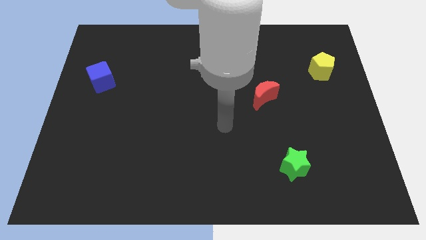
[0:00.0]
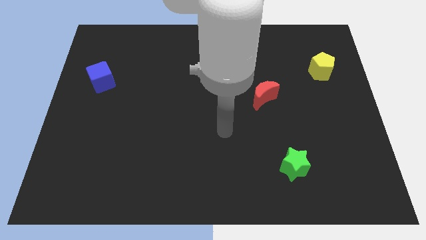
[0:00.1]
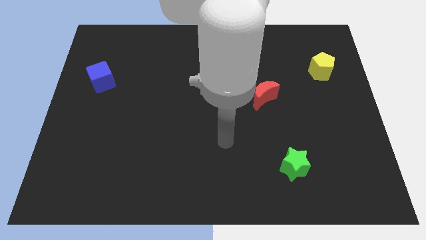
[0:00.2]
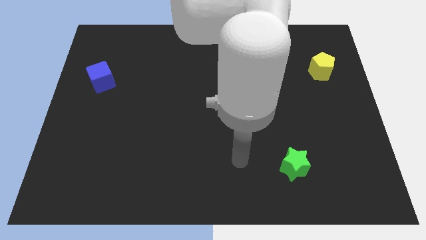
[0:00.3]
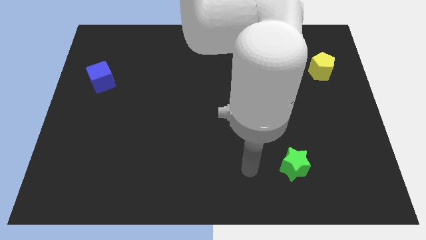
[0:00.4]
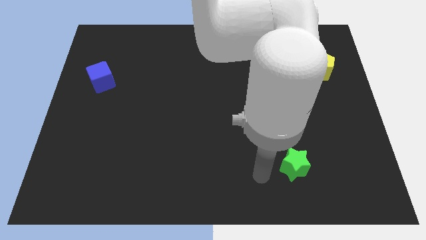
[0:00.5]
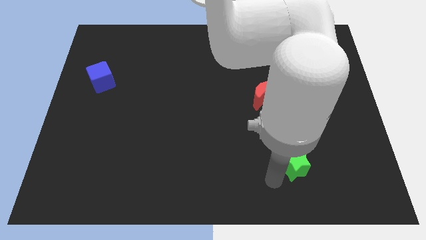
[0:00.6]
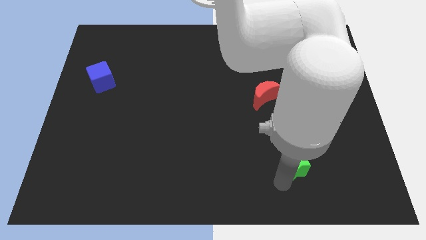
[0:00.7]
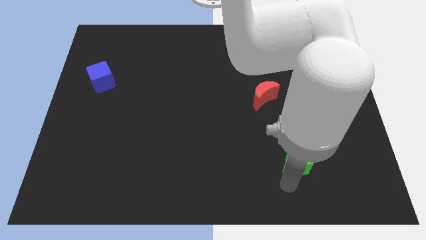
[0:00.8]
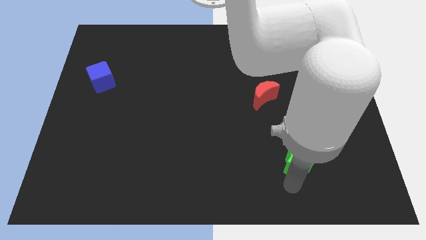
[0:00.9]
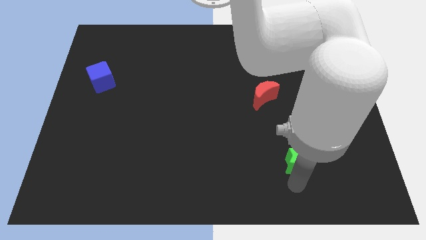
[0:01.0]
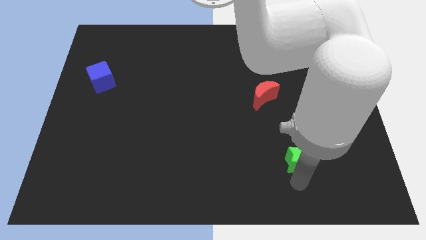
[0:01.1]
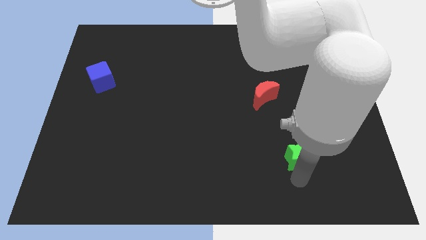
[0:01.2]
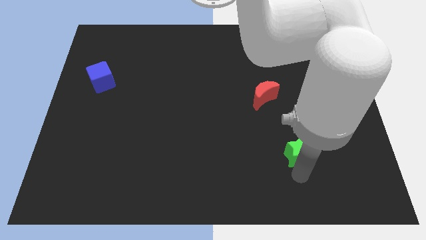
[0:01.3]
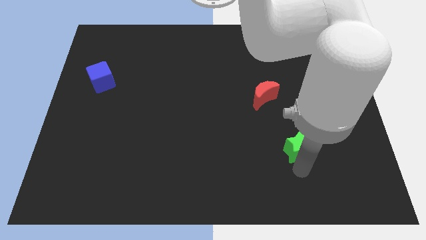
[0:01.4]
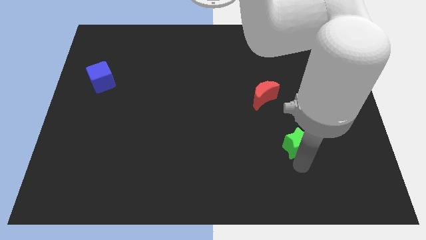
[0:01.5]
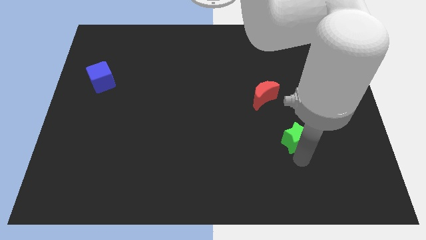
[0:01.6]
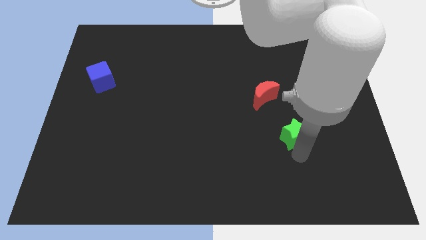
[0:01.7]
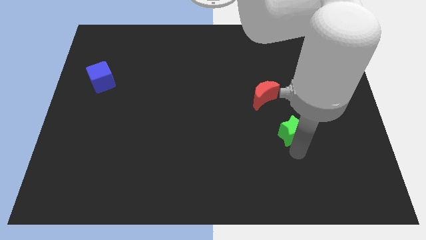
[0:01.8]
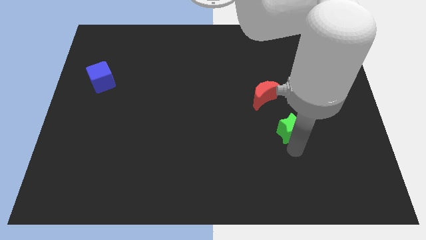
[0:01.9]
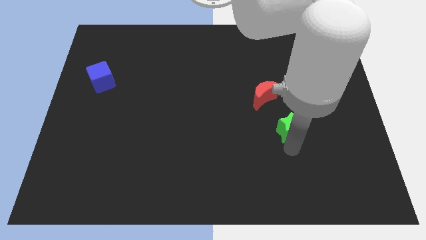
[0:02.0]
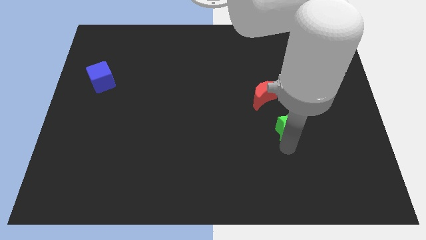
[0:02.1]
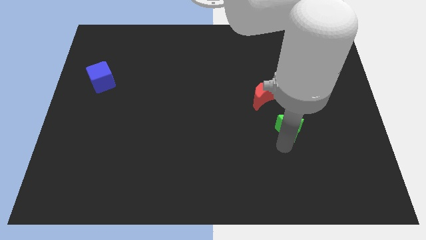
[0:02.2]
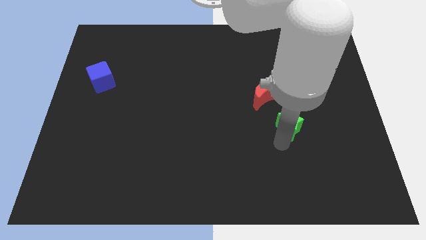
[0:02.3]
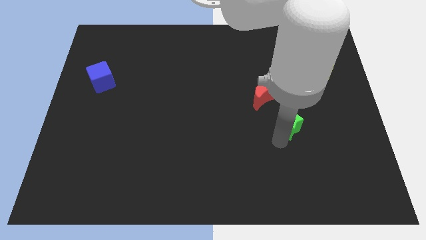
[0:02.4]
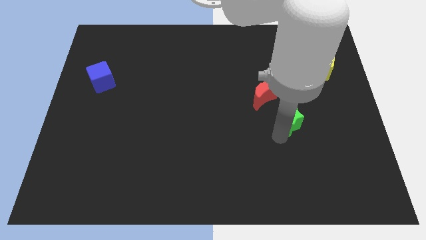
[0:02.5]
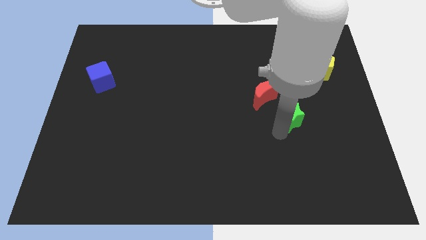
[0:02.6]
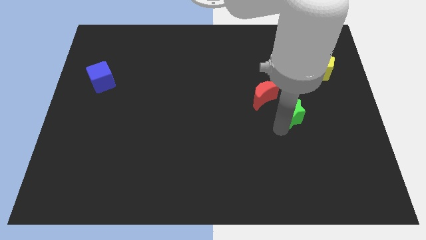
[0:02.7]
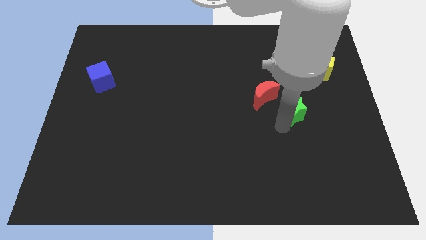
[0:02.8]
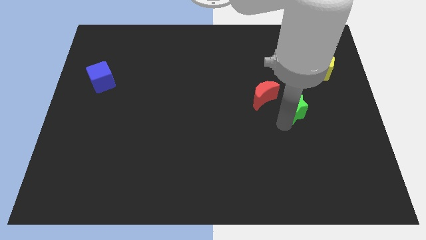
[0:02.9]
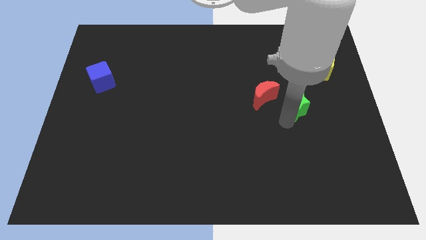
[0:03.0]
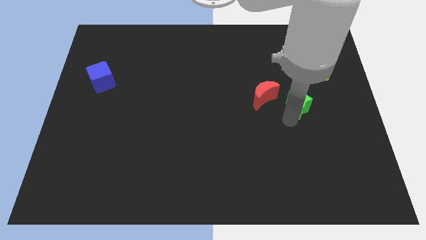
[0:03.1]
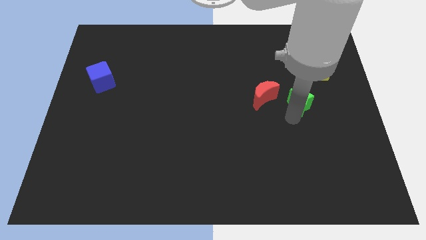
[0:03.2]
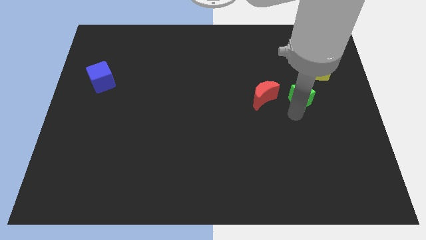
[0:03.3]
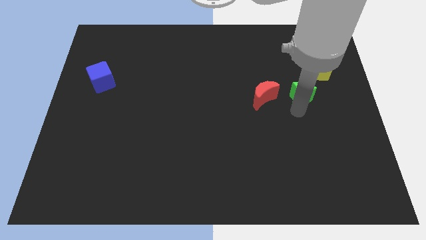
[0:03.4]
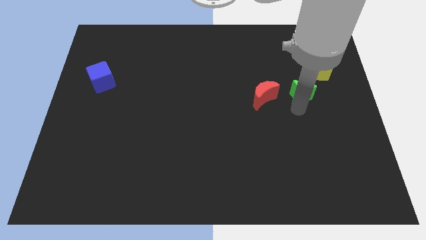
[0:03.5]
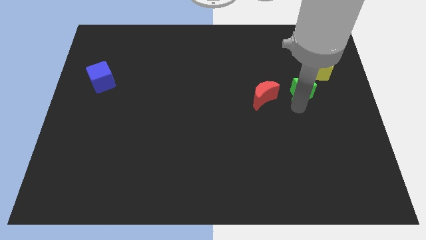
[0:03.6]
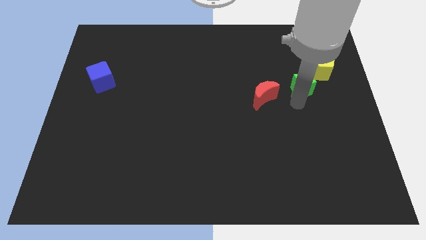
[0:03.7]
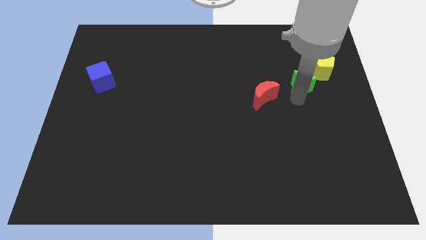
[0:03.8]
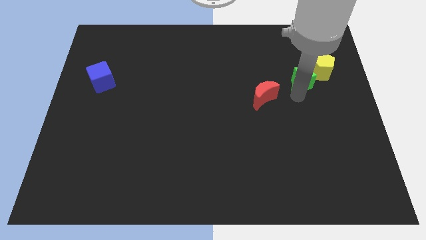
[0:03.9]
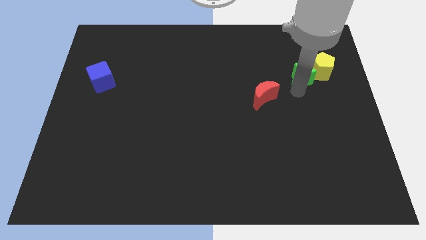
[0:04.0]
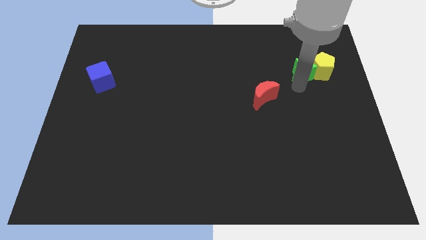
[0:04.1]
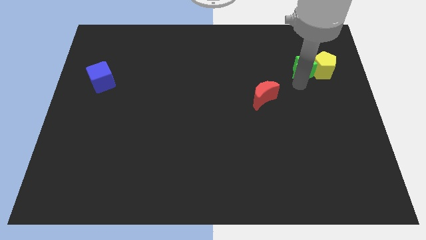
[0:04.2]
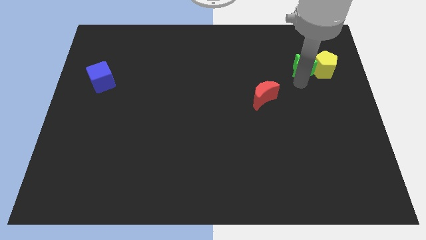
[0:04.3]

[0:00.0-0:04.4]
put the star towards the pentagon

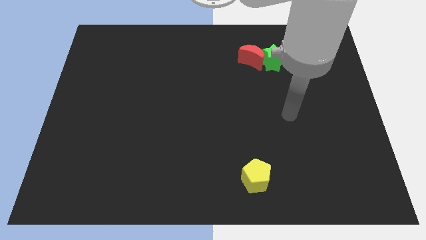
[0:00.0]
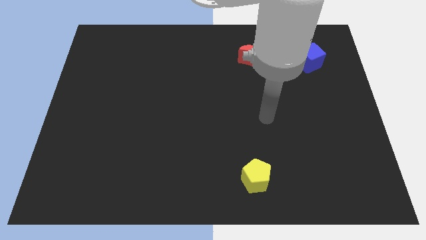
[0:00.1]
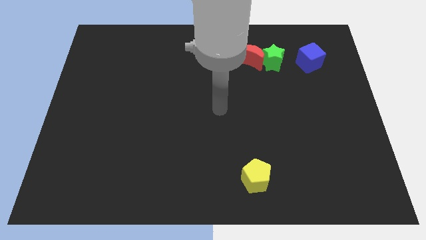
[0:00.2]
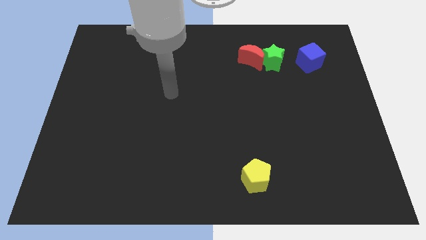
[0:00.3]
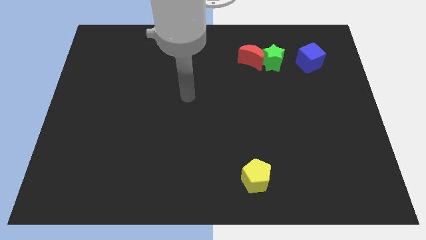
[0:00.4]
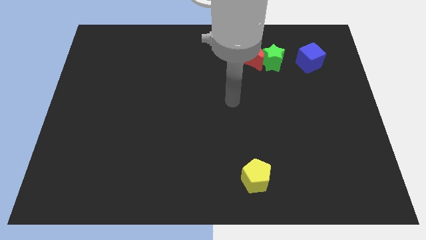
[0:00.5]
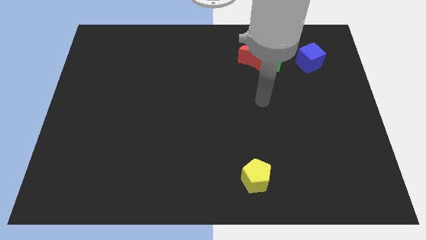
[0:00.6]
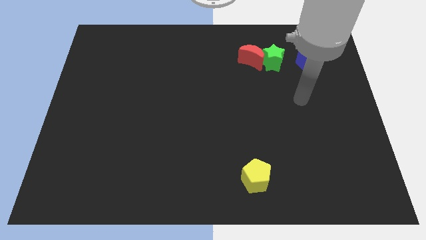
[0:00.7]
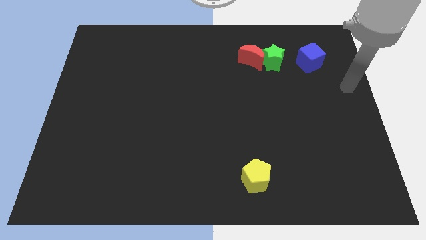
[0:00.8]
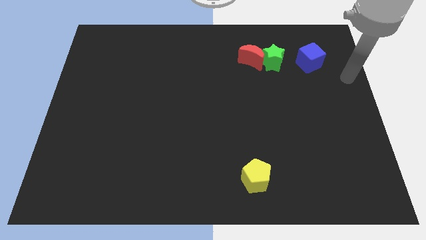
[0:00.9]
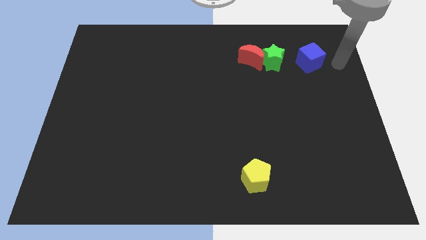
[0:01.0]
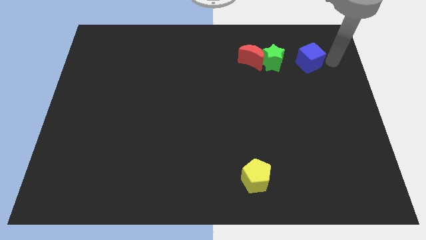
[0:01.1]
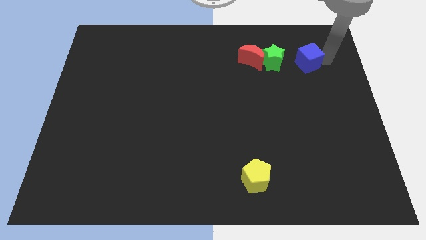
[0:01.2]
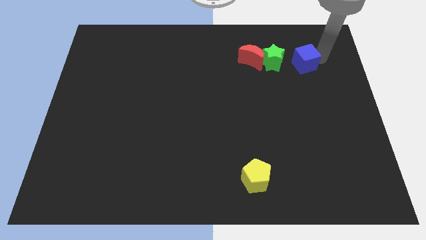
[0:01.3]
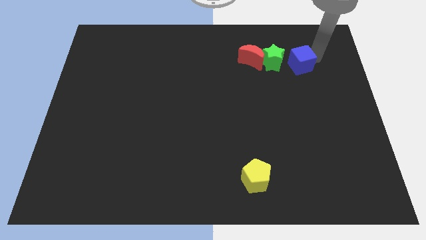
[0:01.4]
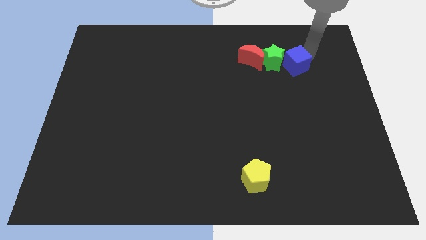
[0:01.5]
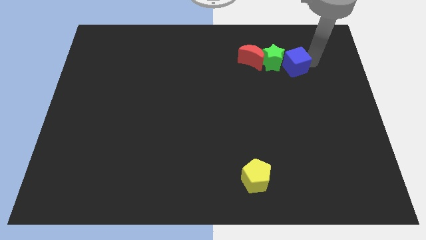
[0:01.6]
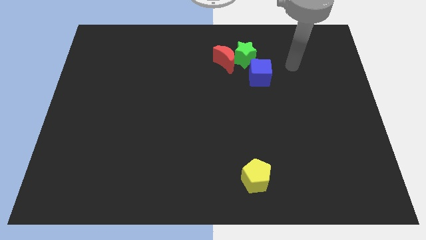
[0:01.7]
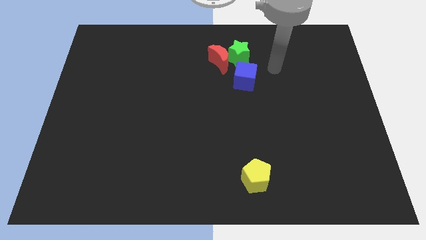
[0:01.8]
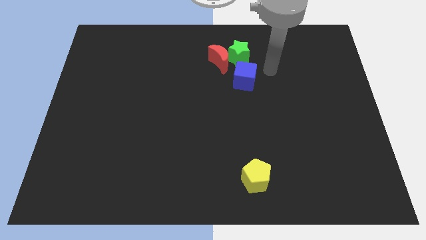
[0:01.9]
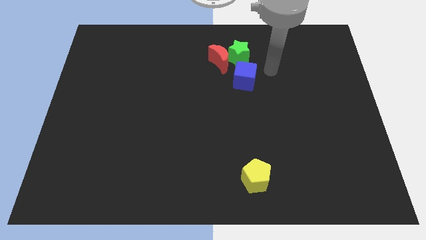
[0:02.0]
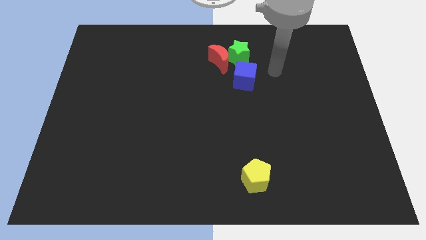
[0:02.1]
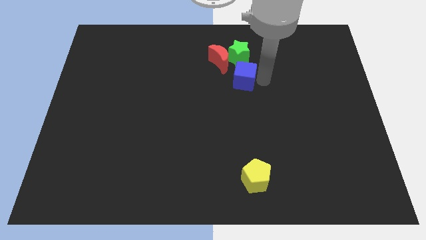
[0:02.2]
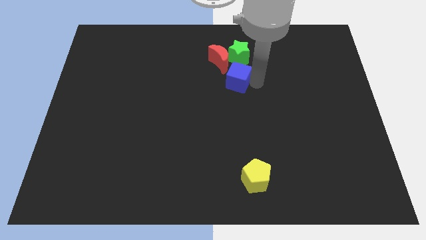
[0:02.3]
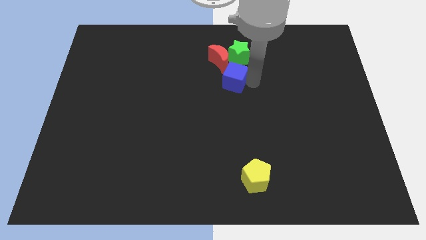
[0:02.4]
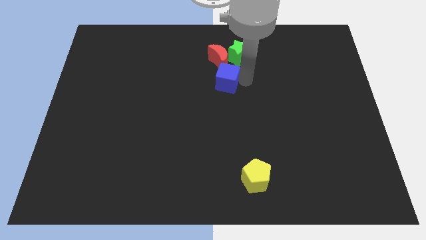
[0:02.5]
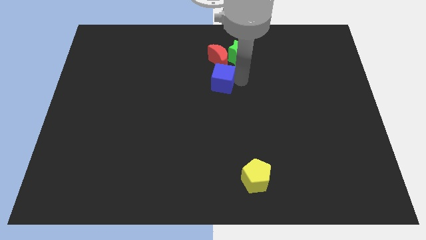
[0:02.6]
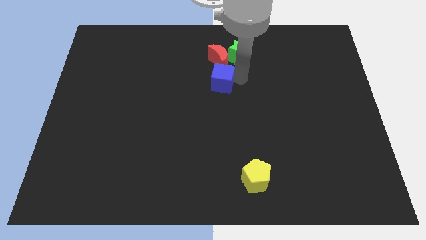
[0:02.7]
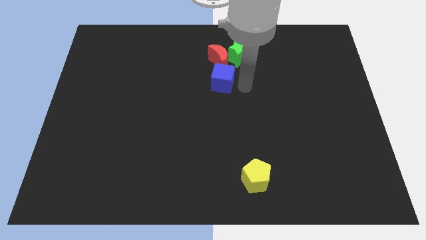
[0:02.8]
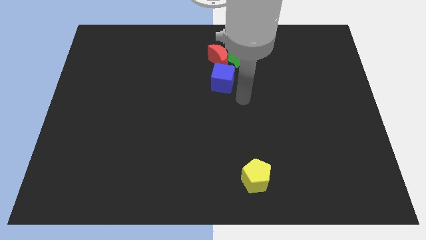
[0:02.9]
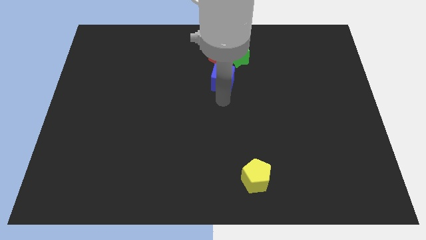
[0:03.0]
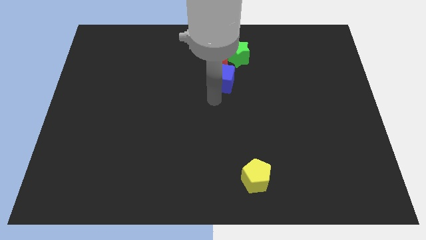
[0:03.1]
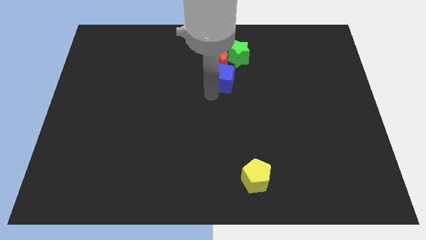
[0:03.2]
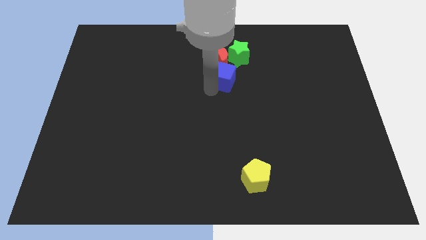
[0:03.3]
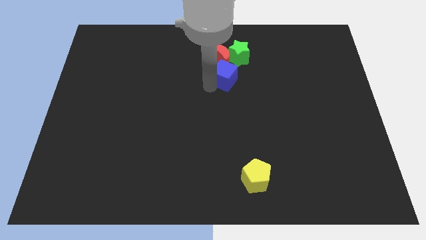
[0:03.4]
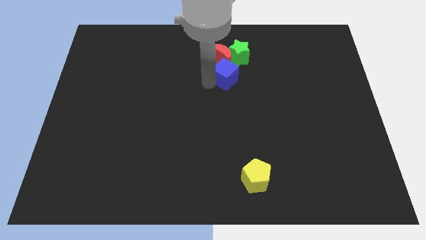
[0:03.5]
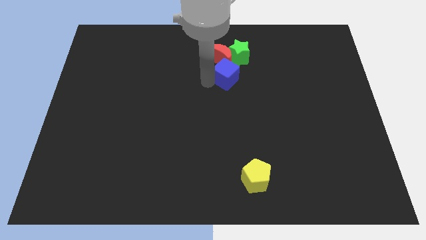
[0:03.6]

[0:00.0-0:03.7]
put the cube towards the red block

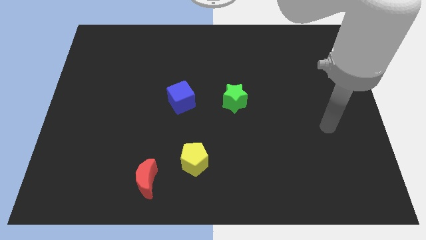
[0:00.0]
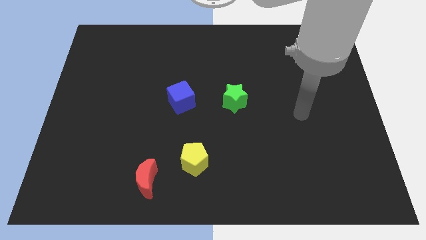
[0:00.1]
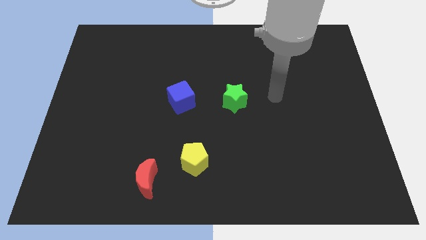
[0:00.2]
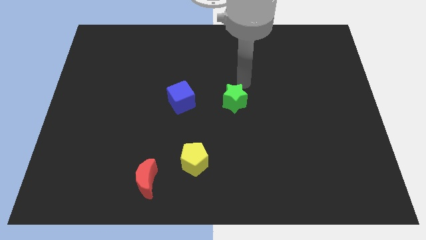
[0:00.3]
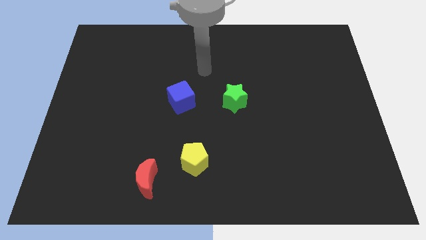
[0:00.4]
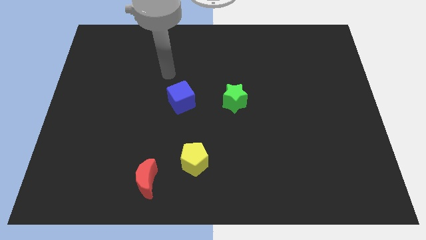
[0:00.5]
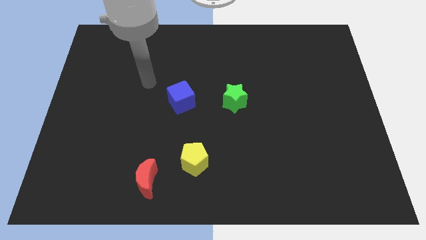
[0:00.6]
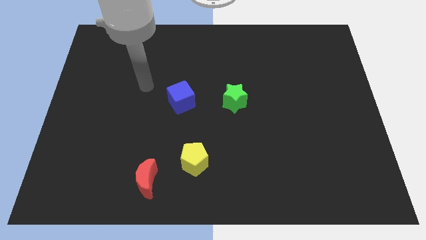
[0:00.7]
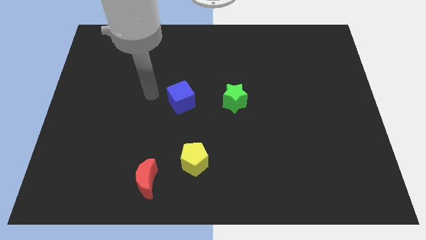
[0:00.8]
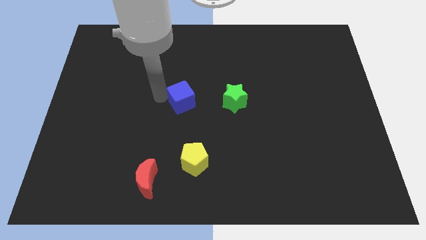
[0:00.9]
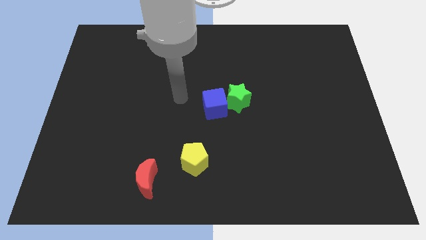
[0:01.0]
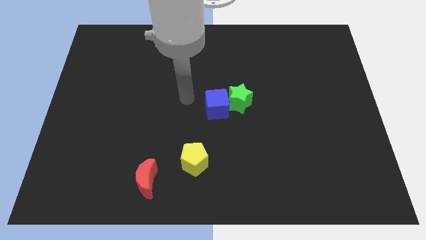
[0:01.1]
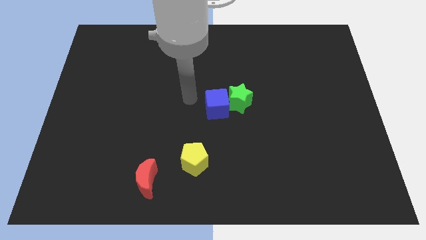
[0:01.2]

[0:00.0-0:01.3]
move the cube towards the green star
